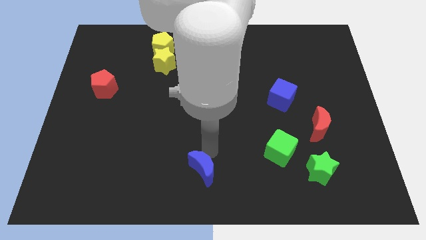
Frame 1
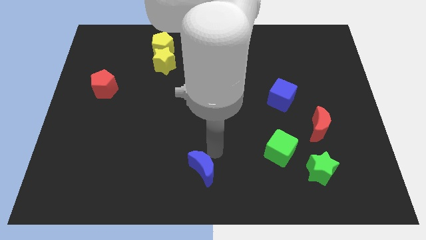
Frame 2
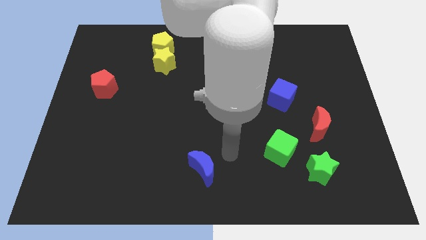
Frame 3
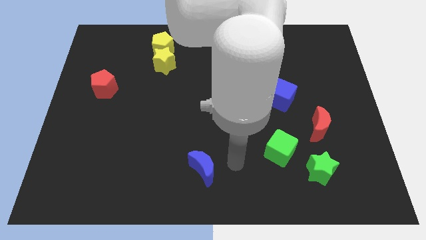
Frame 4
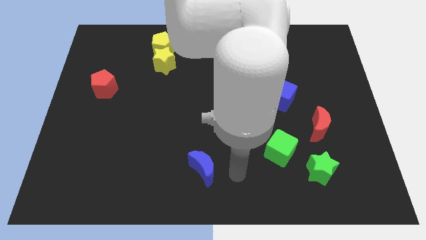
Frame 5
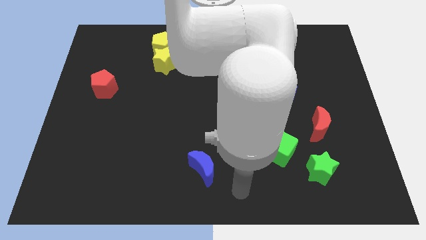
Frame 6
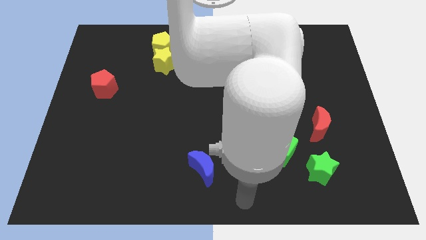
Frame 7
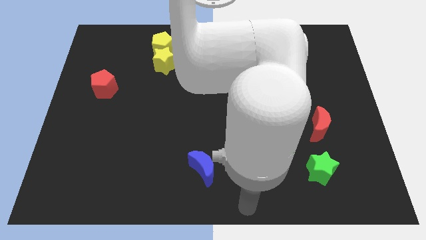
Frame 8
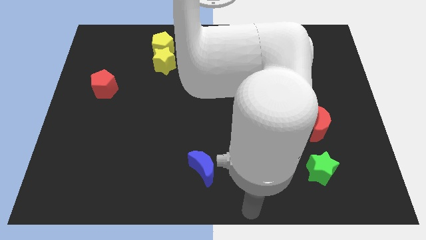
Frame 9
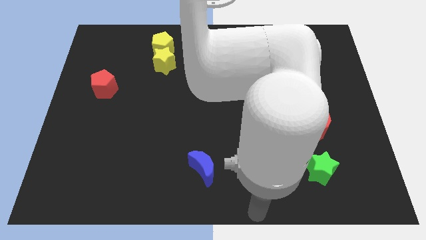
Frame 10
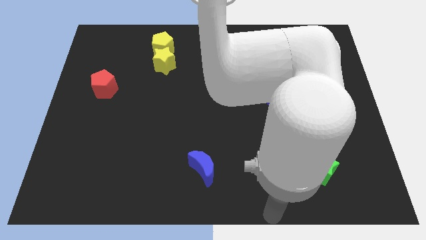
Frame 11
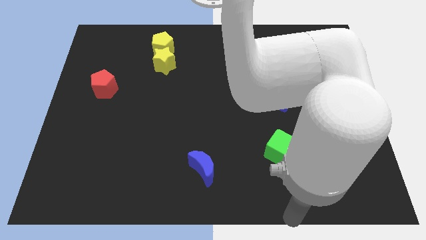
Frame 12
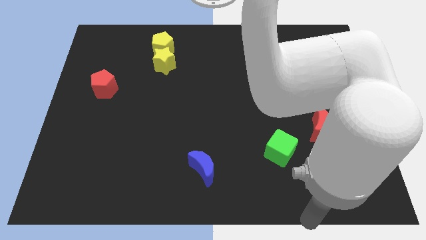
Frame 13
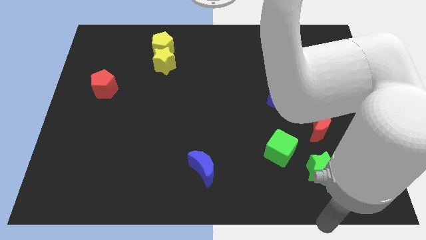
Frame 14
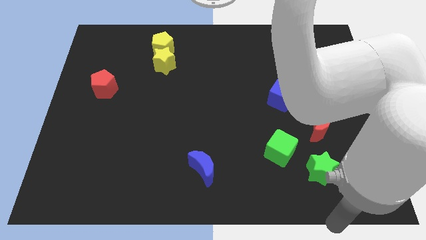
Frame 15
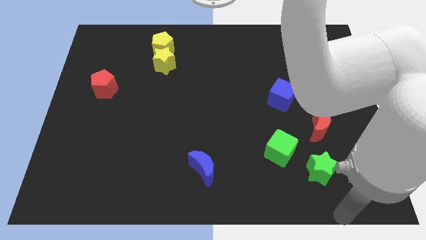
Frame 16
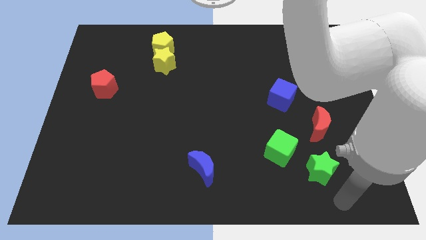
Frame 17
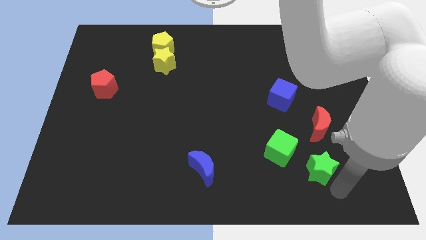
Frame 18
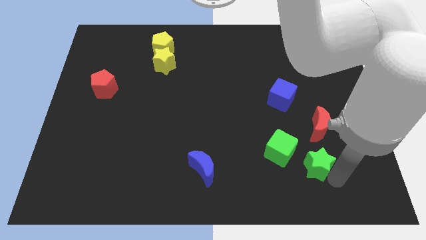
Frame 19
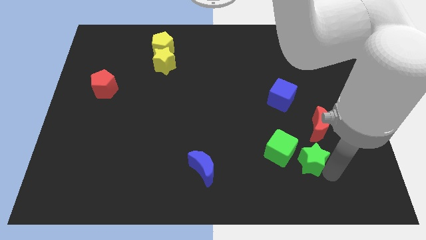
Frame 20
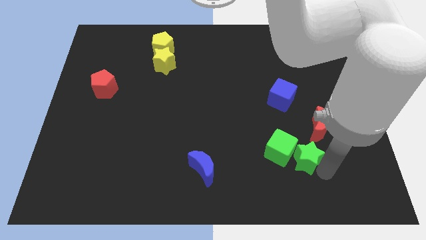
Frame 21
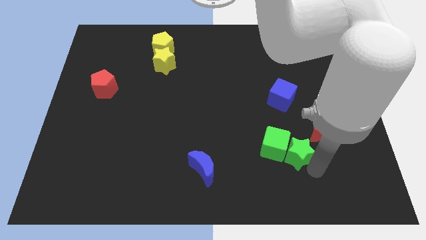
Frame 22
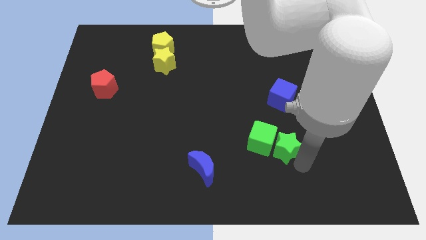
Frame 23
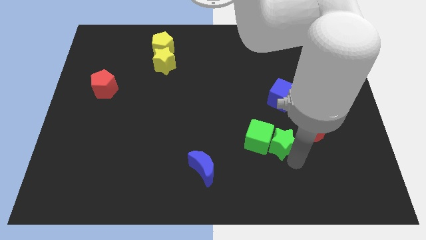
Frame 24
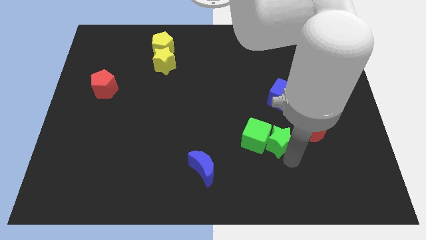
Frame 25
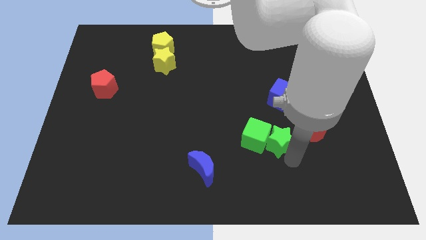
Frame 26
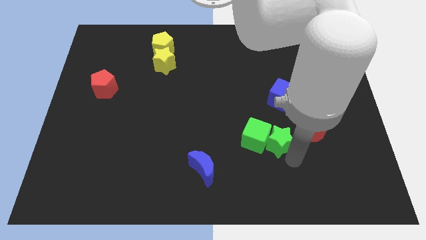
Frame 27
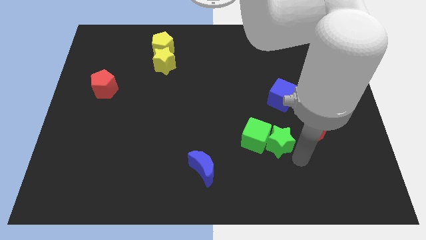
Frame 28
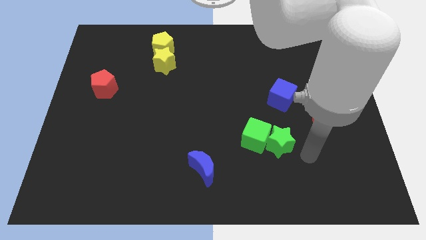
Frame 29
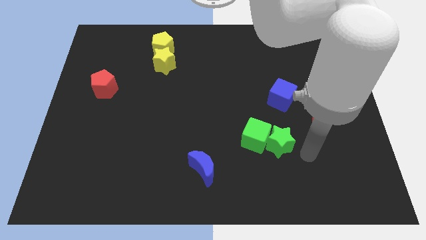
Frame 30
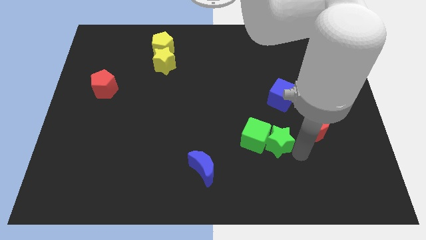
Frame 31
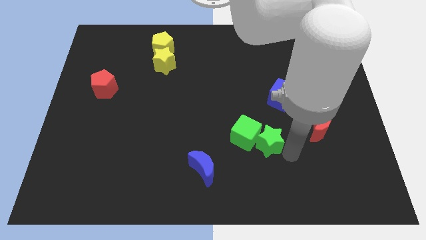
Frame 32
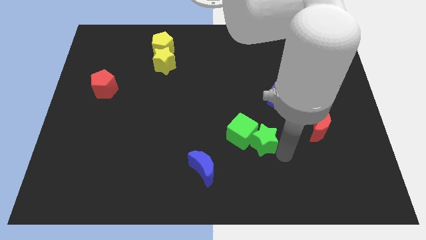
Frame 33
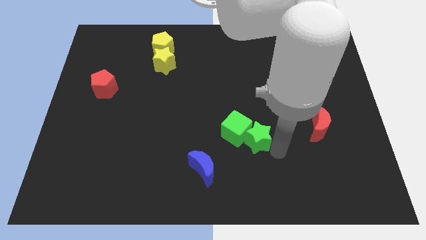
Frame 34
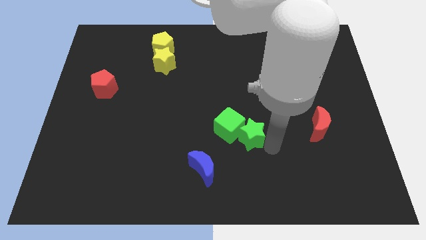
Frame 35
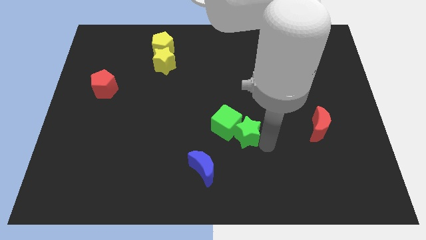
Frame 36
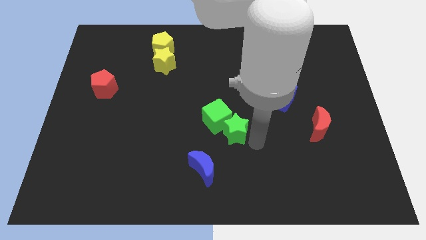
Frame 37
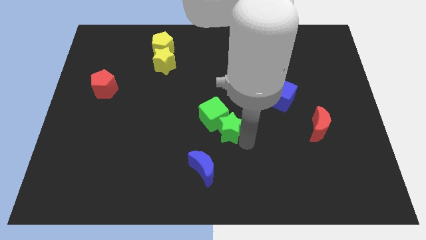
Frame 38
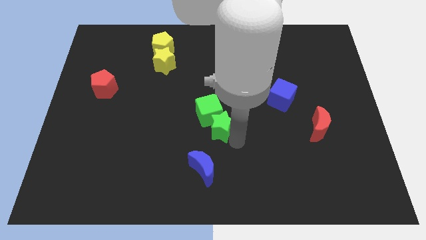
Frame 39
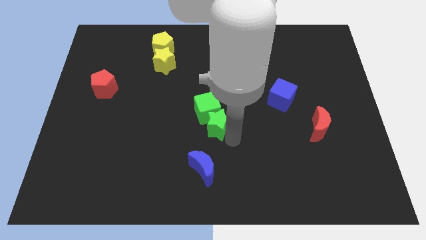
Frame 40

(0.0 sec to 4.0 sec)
move green blocks to the center

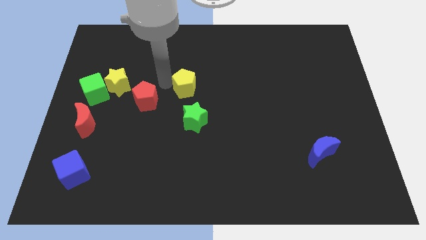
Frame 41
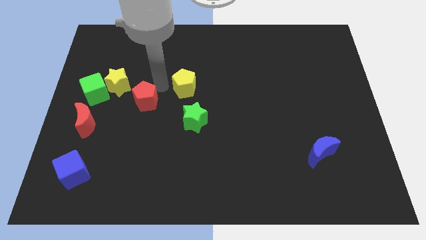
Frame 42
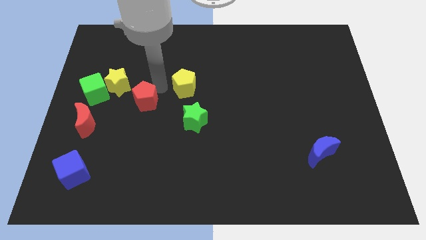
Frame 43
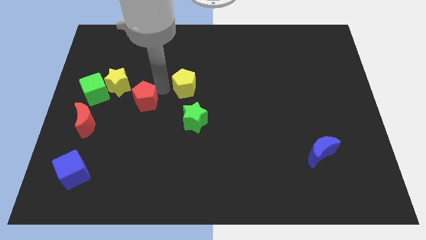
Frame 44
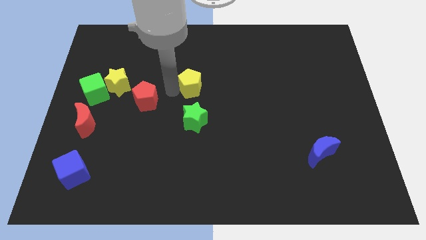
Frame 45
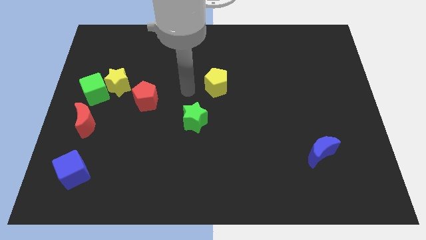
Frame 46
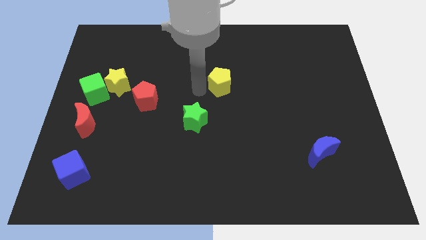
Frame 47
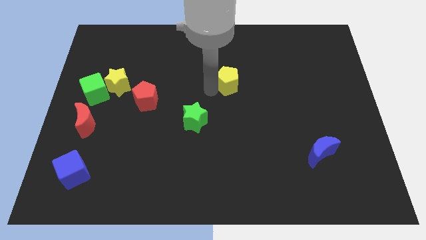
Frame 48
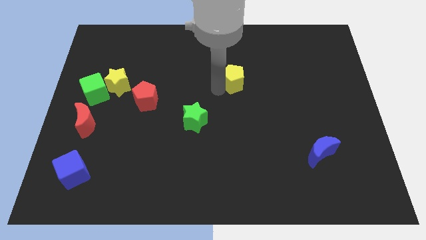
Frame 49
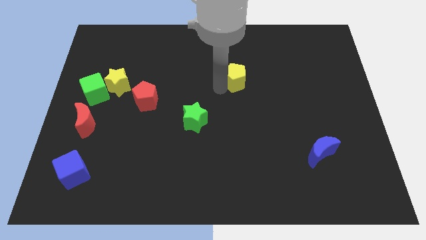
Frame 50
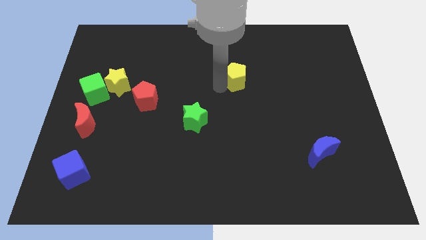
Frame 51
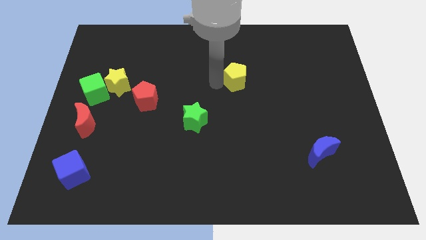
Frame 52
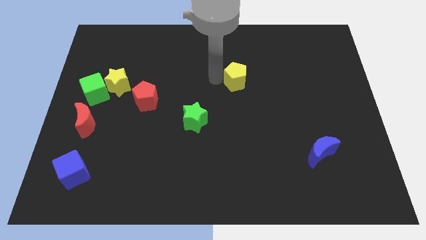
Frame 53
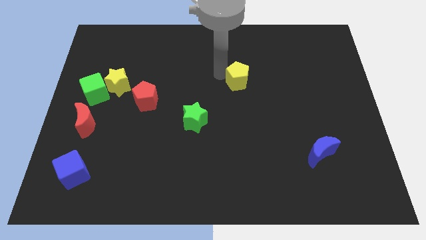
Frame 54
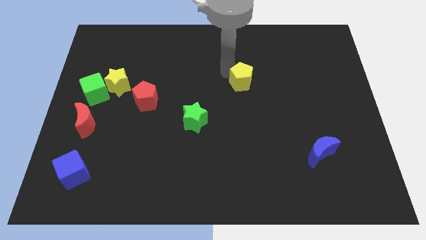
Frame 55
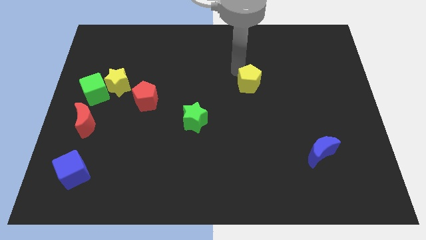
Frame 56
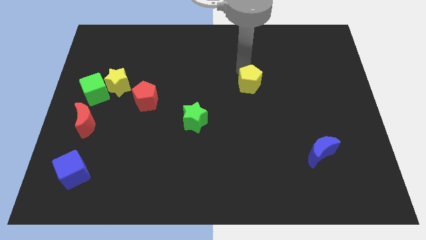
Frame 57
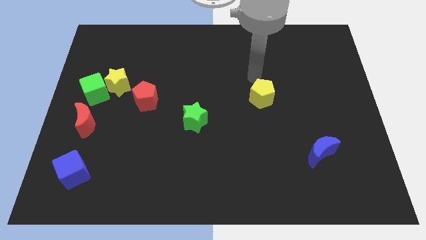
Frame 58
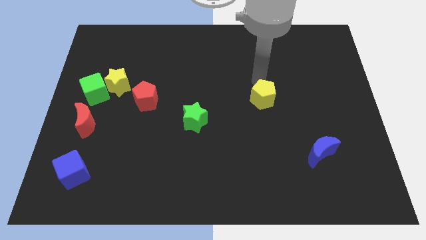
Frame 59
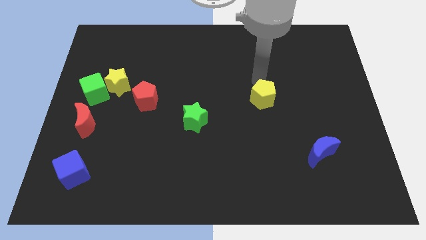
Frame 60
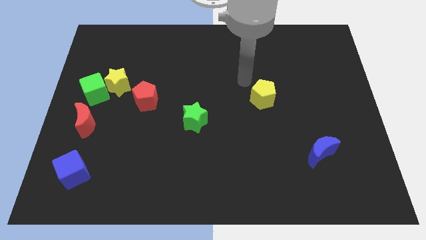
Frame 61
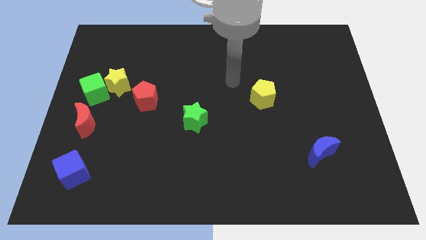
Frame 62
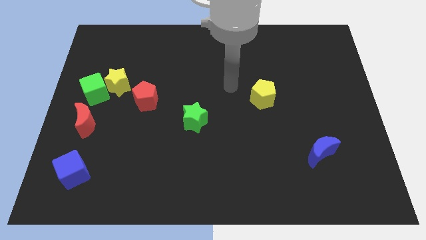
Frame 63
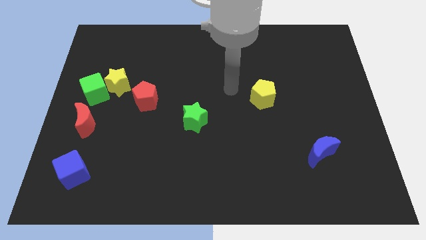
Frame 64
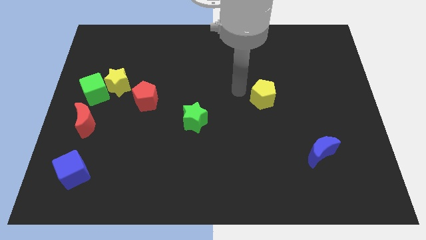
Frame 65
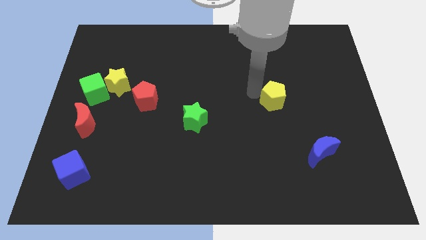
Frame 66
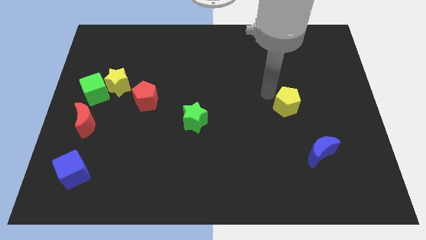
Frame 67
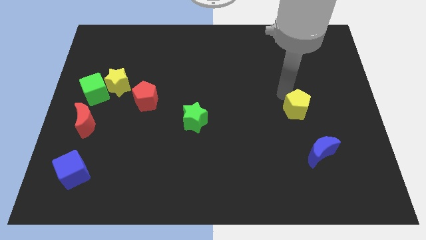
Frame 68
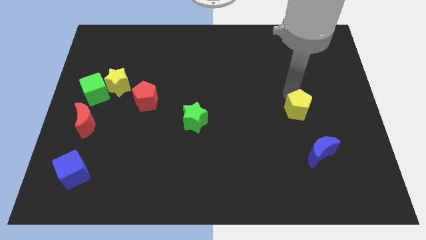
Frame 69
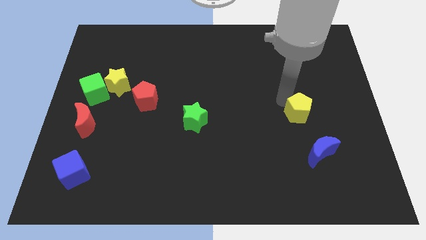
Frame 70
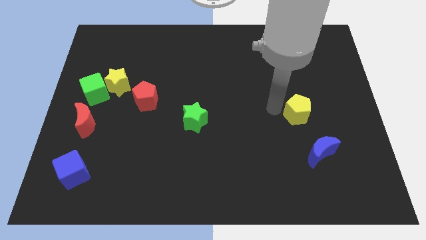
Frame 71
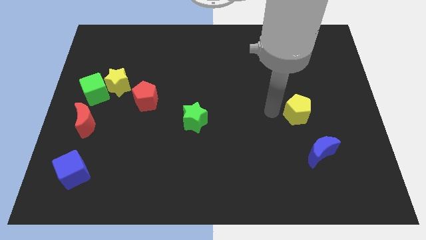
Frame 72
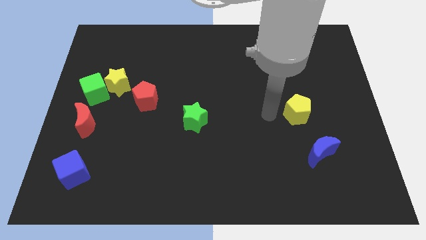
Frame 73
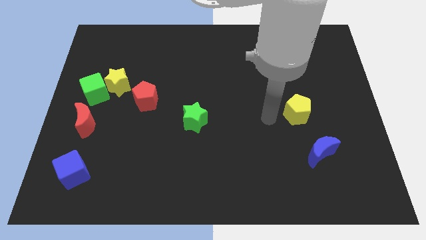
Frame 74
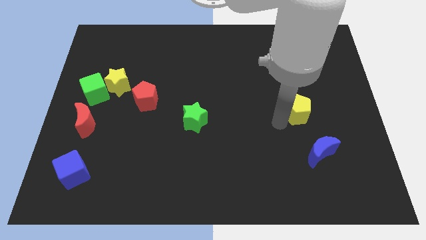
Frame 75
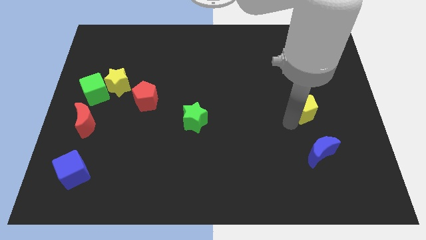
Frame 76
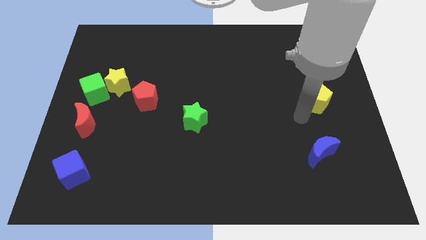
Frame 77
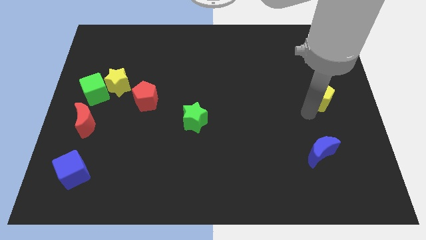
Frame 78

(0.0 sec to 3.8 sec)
place yellow pentagon to the top of blue moon

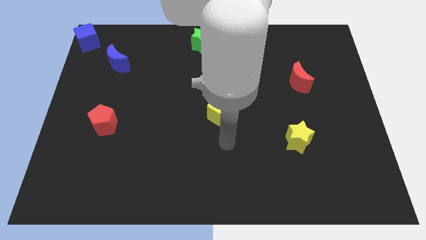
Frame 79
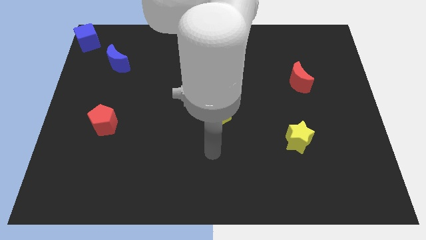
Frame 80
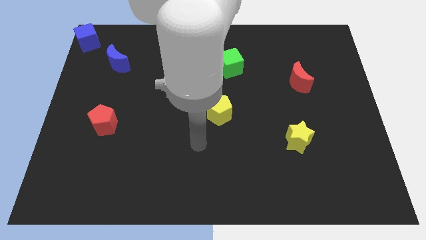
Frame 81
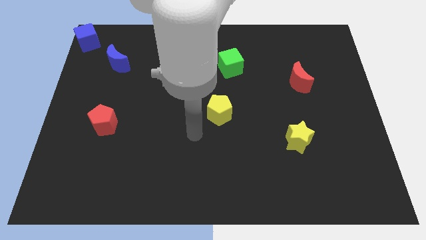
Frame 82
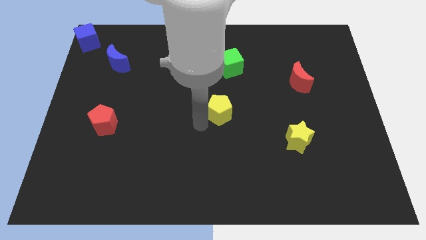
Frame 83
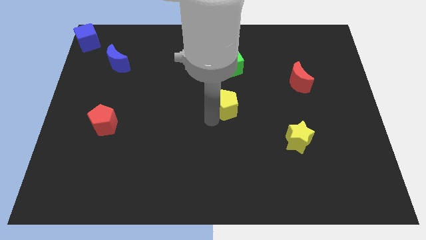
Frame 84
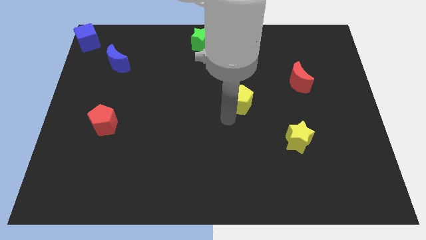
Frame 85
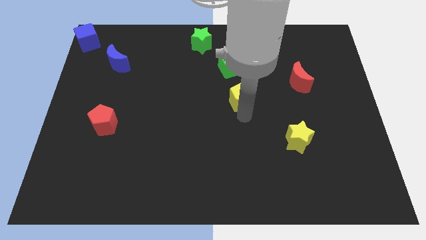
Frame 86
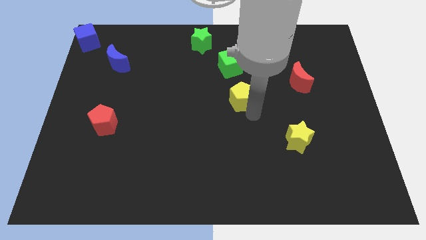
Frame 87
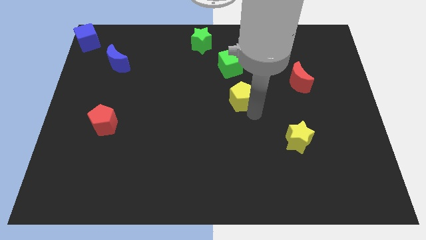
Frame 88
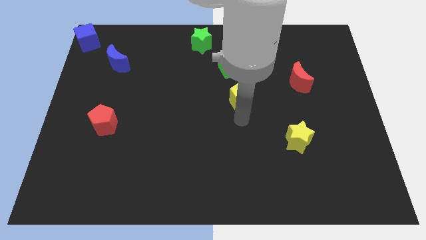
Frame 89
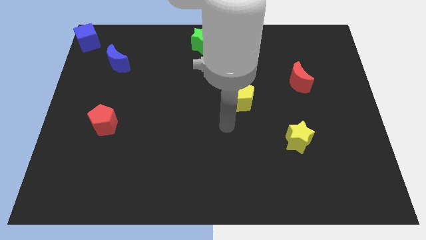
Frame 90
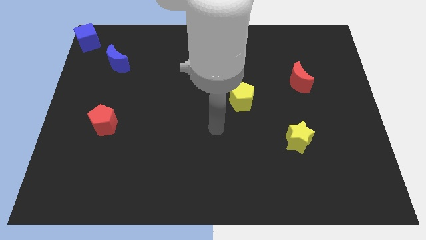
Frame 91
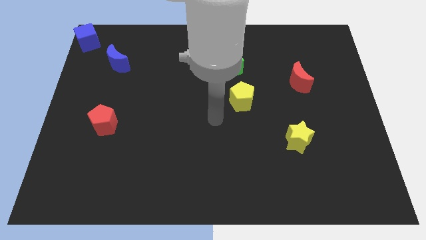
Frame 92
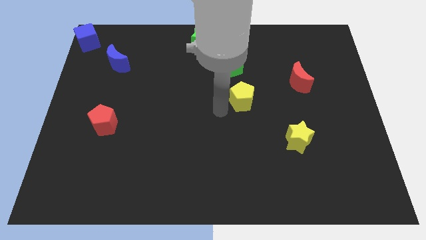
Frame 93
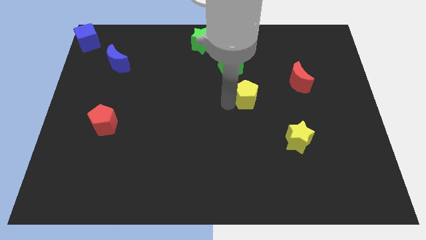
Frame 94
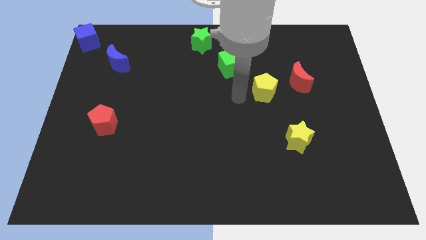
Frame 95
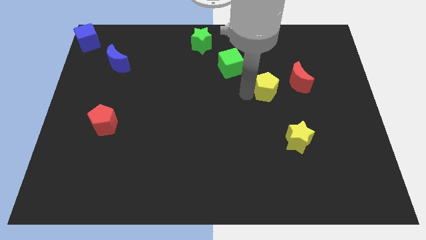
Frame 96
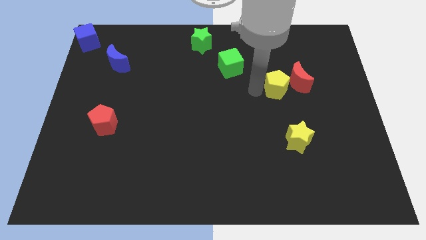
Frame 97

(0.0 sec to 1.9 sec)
slide the yellow pentagon diagonally bottom right to the green cube
